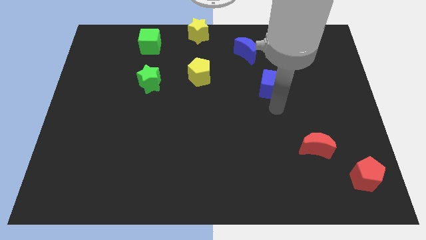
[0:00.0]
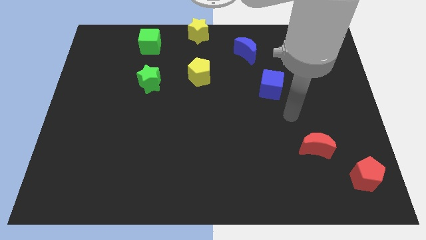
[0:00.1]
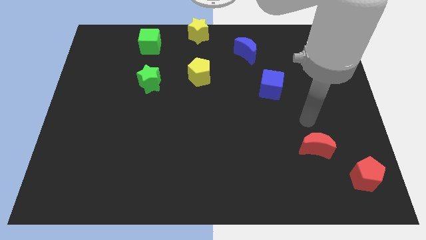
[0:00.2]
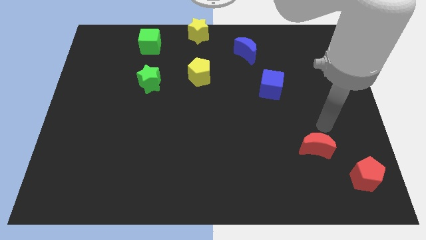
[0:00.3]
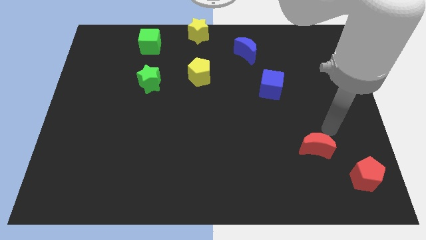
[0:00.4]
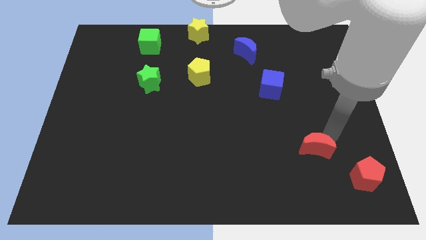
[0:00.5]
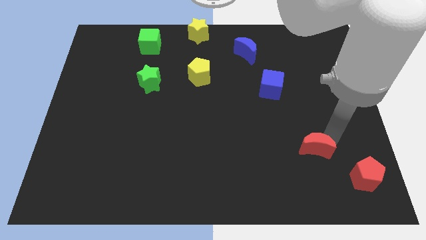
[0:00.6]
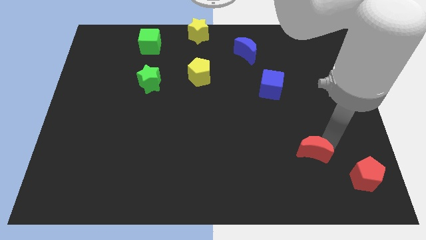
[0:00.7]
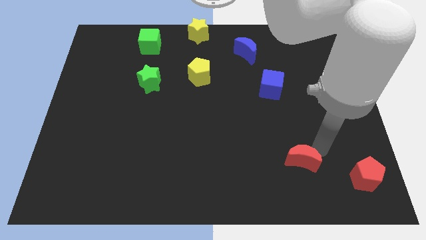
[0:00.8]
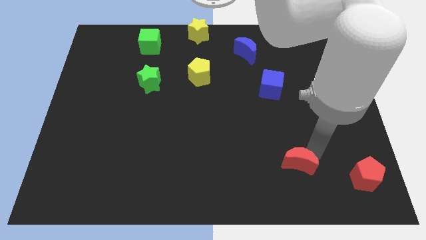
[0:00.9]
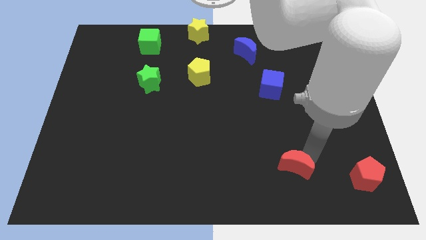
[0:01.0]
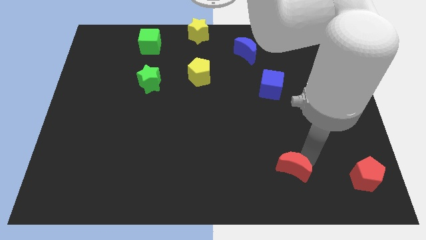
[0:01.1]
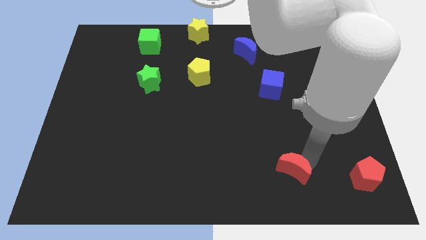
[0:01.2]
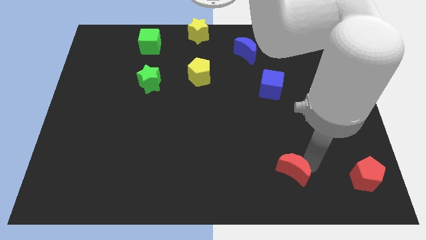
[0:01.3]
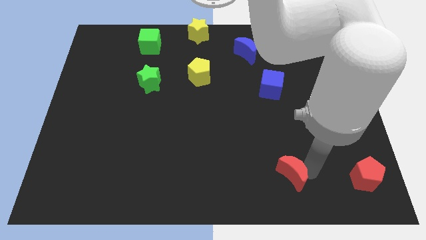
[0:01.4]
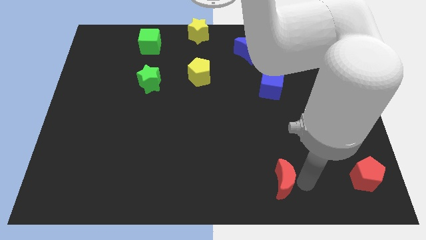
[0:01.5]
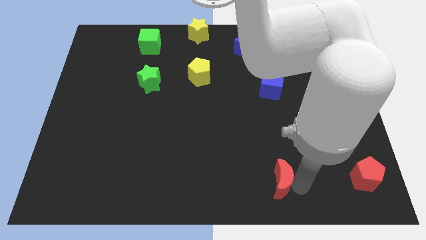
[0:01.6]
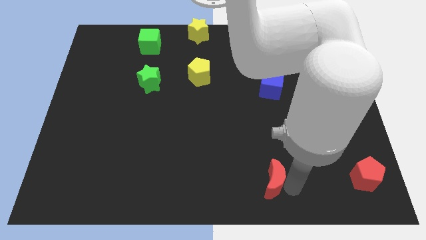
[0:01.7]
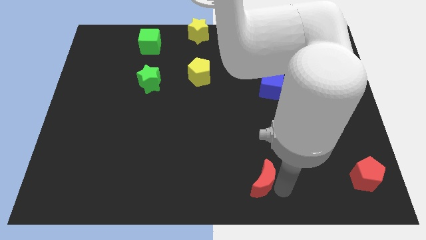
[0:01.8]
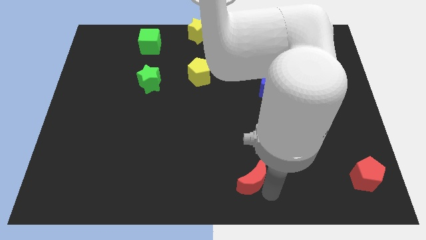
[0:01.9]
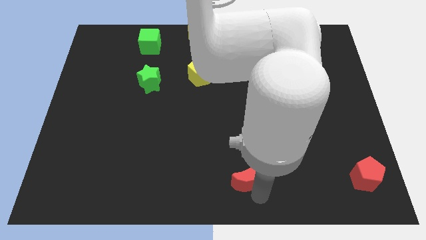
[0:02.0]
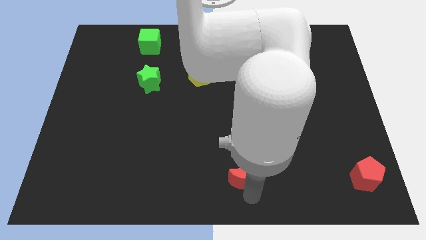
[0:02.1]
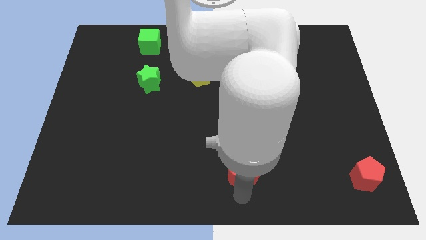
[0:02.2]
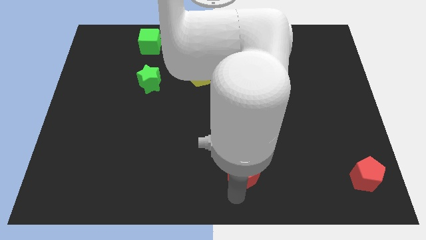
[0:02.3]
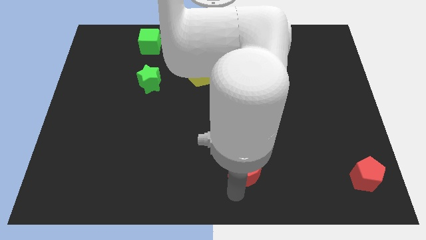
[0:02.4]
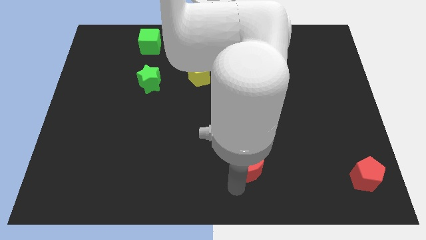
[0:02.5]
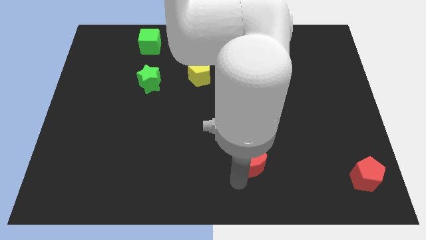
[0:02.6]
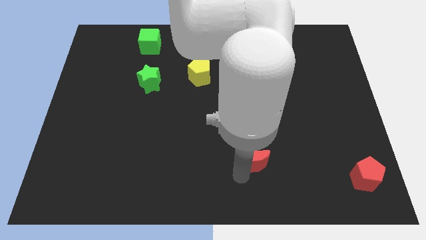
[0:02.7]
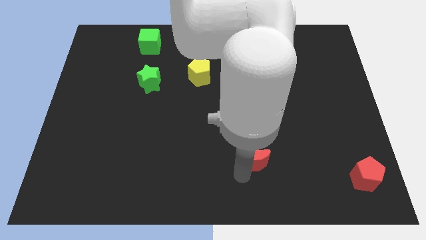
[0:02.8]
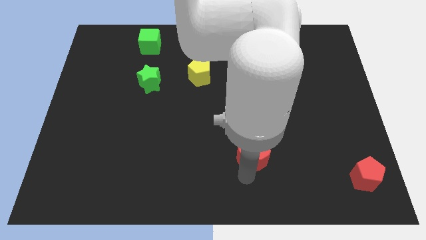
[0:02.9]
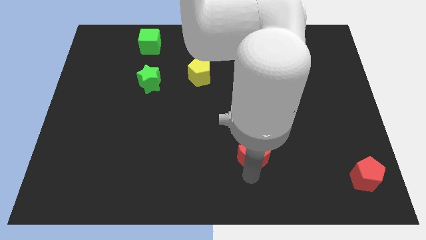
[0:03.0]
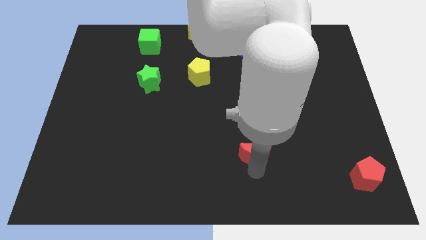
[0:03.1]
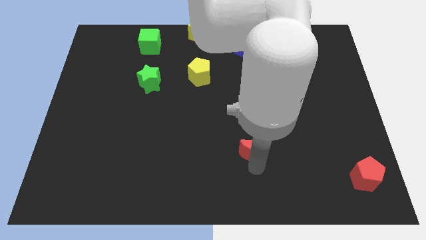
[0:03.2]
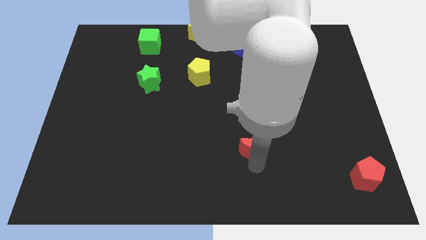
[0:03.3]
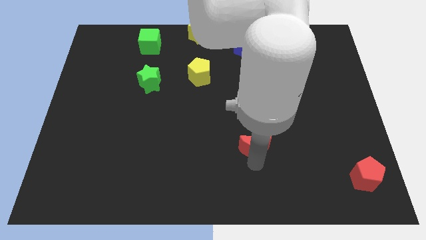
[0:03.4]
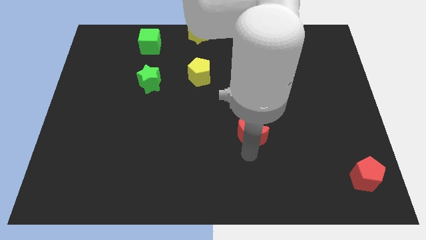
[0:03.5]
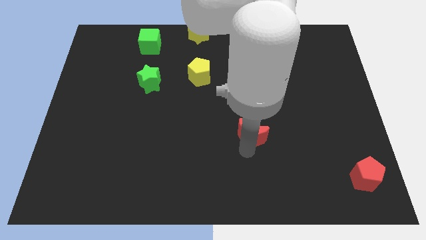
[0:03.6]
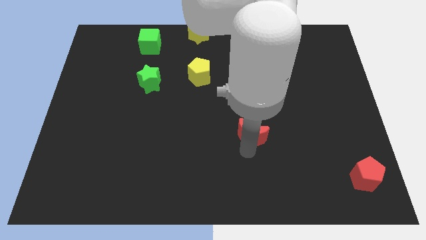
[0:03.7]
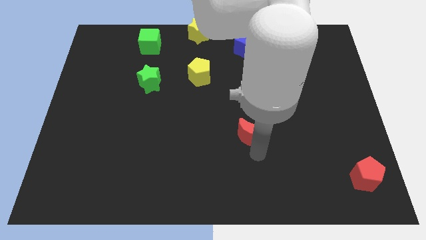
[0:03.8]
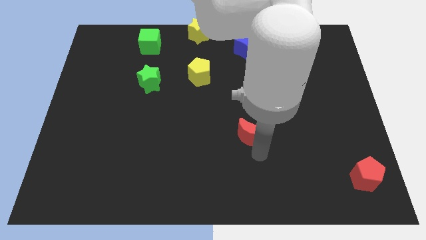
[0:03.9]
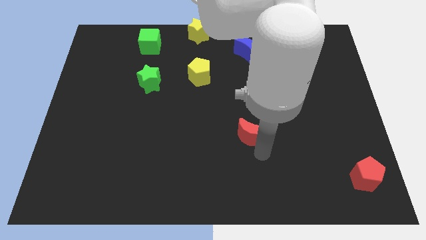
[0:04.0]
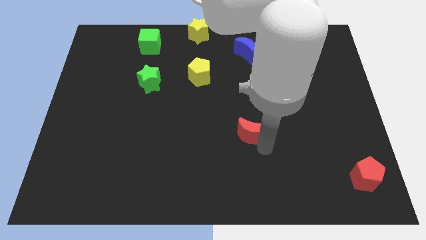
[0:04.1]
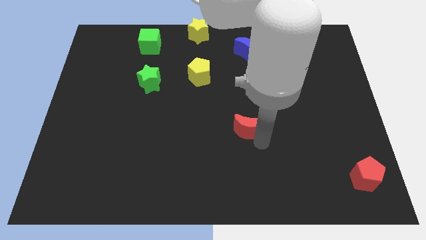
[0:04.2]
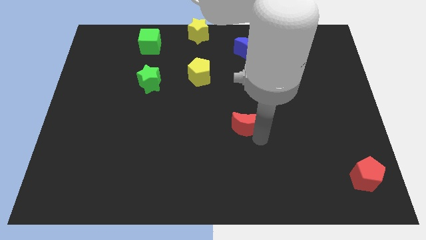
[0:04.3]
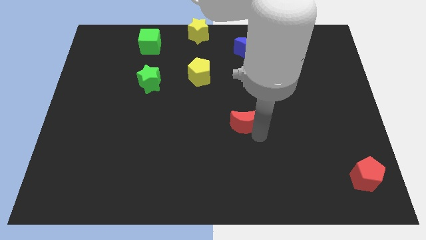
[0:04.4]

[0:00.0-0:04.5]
place the red crescent diagonal to the red pentagon

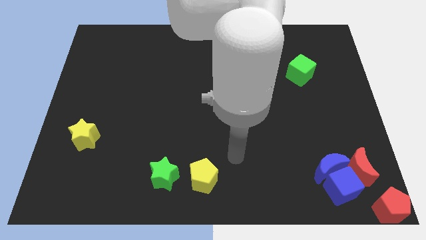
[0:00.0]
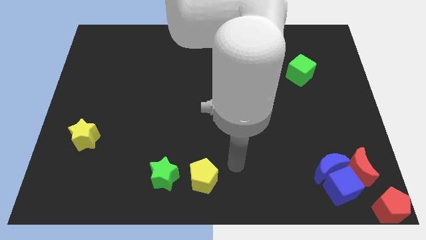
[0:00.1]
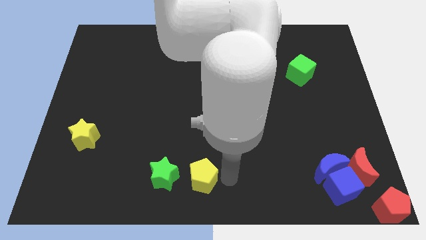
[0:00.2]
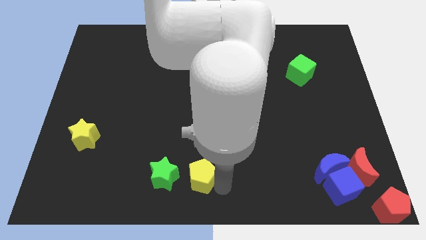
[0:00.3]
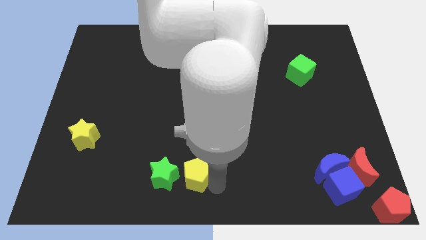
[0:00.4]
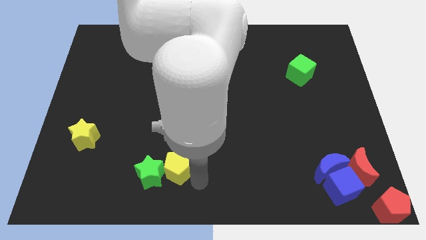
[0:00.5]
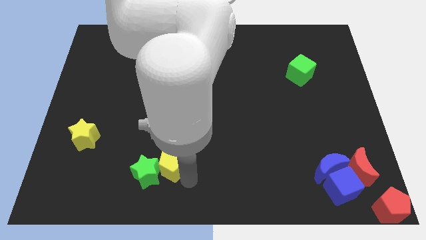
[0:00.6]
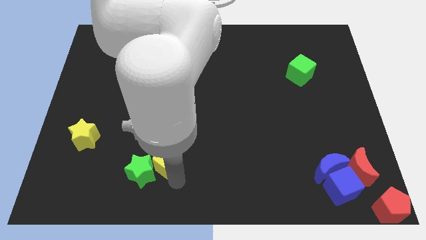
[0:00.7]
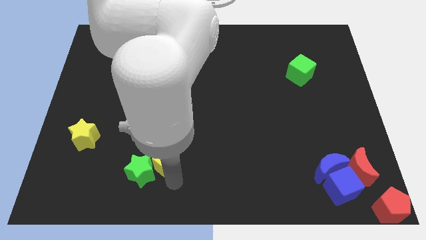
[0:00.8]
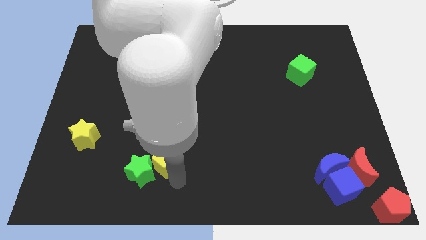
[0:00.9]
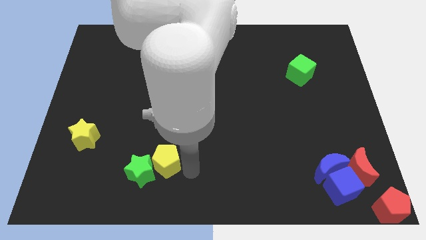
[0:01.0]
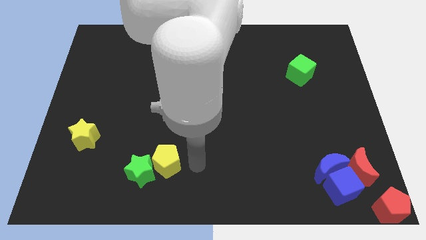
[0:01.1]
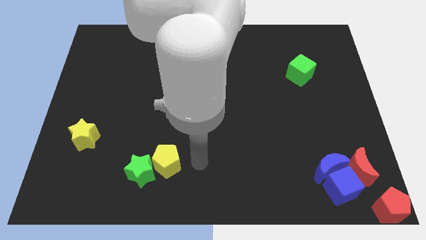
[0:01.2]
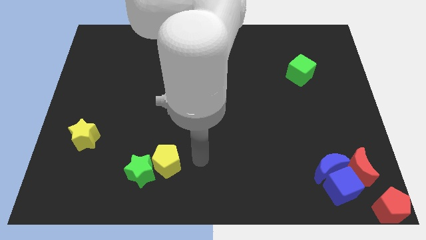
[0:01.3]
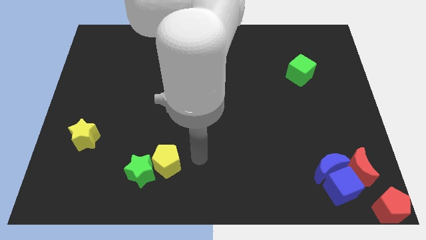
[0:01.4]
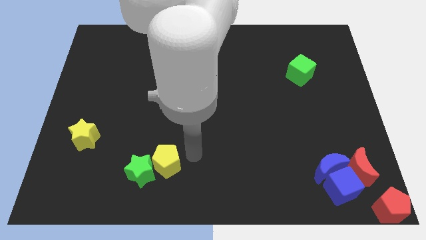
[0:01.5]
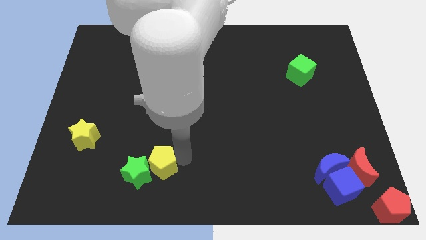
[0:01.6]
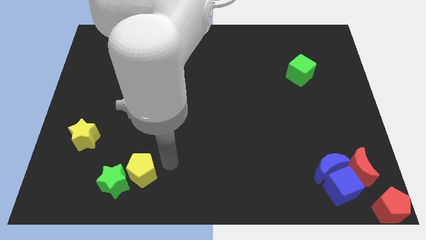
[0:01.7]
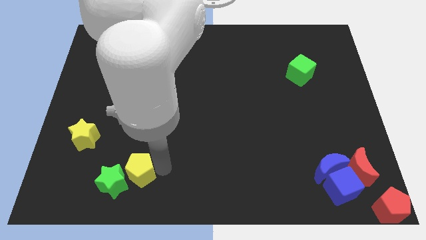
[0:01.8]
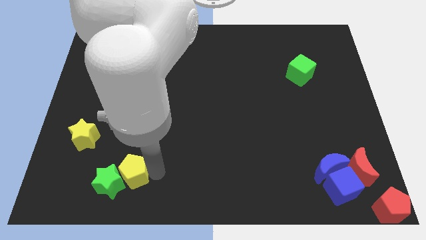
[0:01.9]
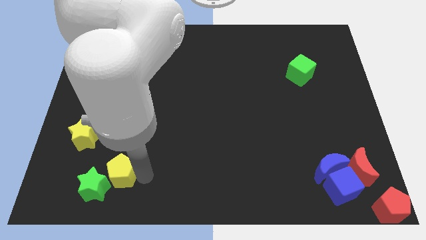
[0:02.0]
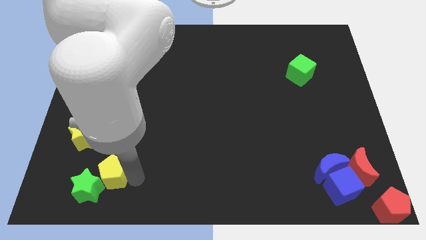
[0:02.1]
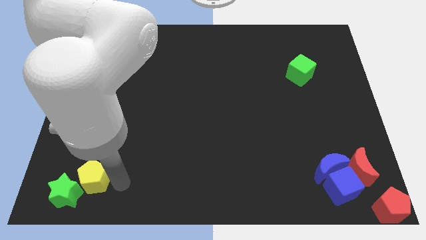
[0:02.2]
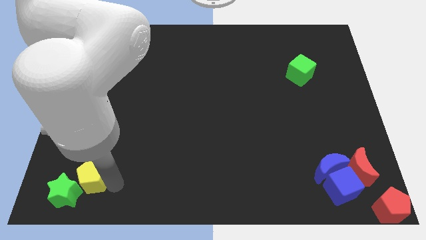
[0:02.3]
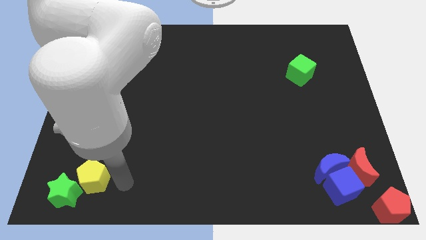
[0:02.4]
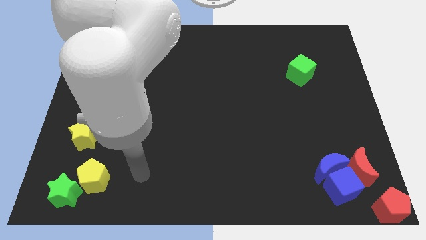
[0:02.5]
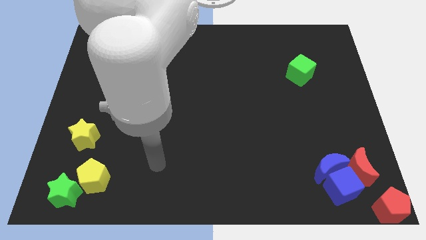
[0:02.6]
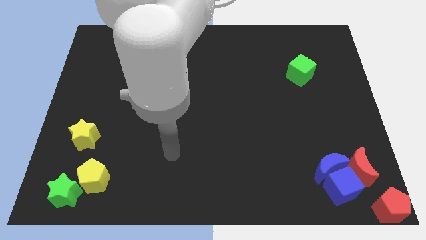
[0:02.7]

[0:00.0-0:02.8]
push yellow pentagon and green star together towards the bottom left corner of the board

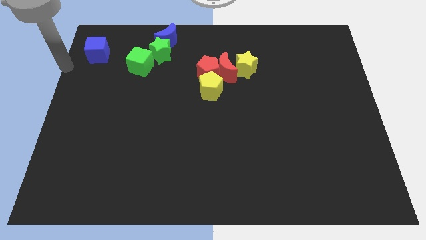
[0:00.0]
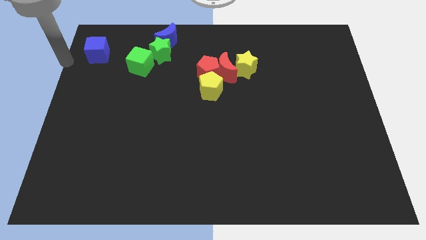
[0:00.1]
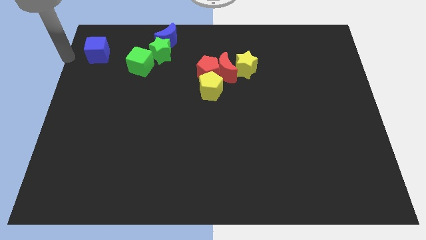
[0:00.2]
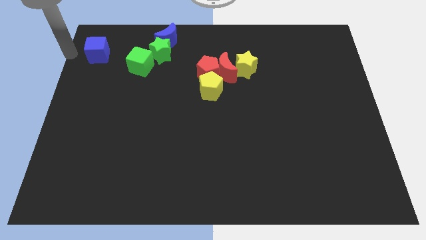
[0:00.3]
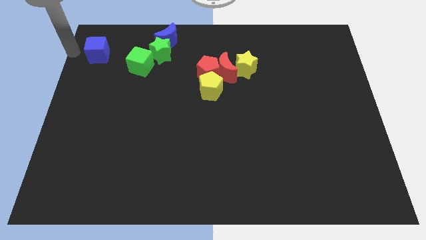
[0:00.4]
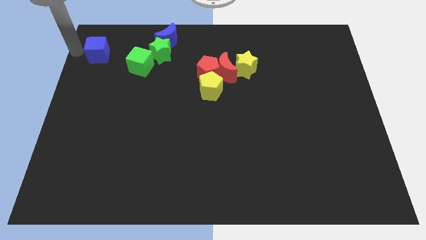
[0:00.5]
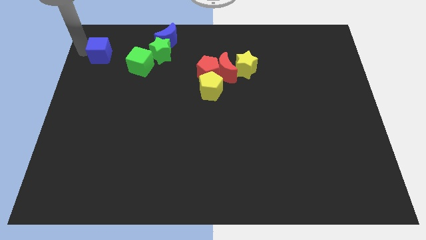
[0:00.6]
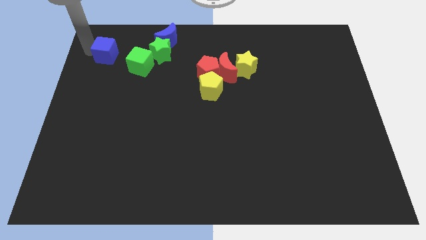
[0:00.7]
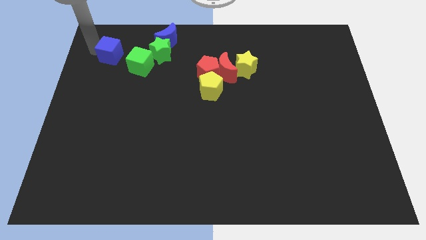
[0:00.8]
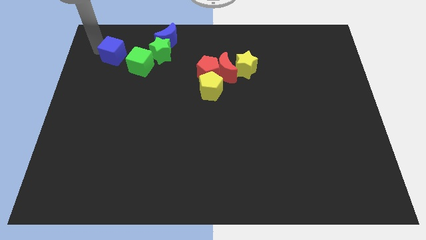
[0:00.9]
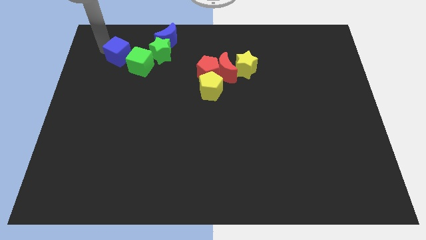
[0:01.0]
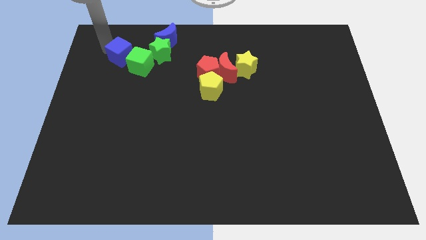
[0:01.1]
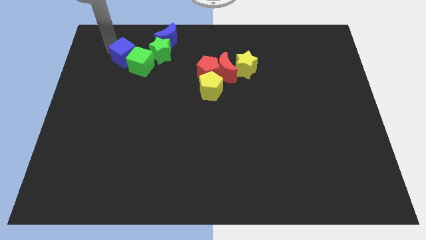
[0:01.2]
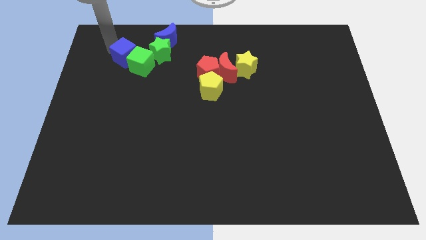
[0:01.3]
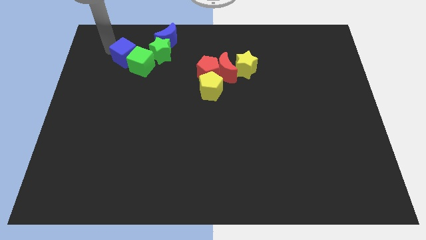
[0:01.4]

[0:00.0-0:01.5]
move the blue cube to the left of the green cube

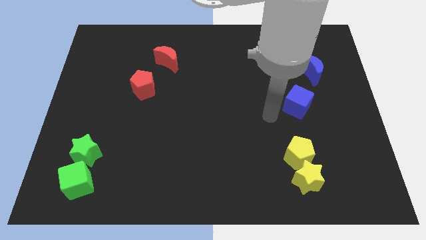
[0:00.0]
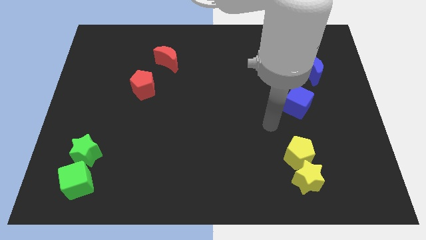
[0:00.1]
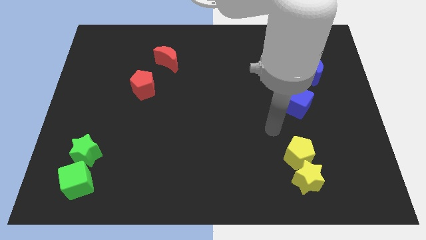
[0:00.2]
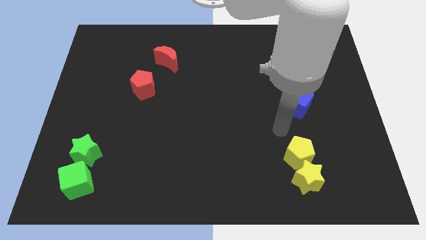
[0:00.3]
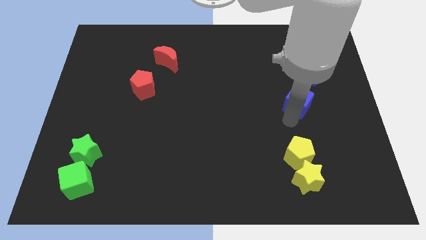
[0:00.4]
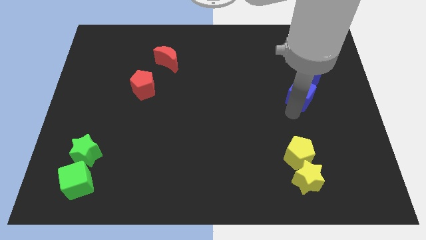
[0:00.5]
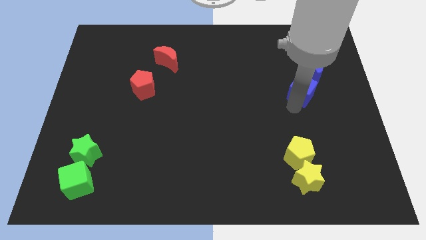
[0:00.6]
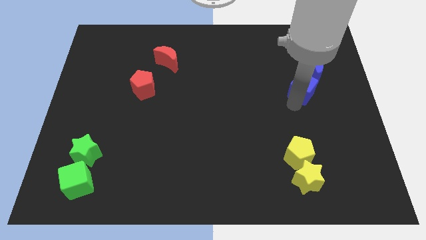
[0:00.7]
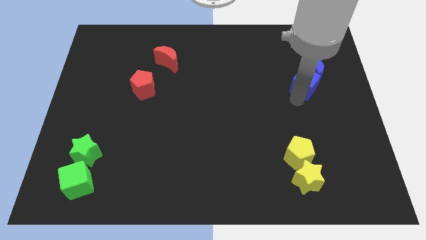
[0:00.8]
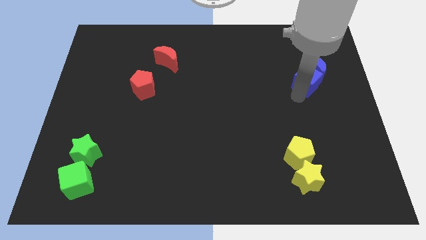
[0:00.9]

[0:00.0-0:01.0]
push blue cube in to blue moon
